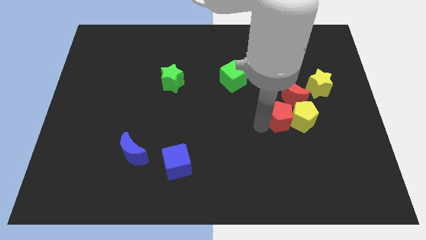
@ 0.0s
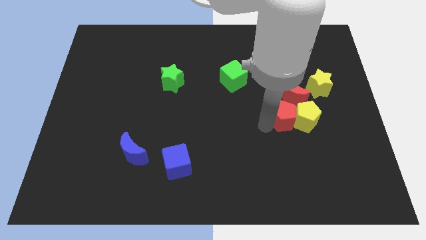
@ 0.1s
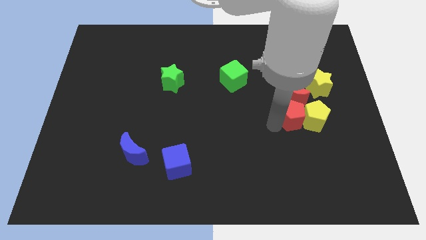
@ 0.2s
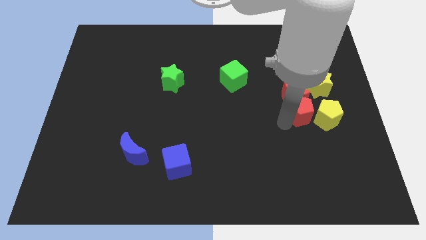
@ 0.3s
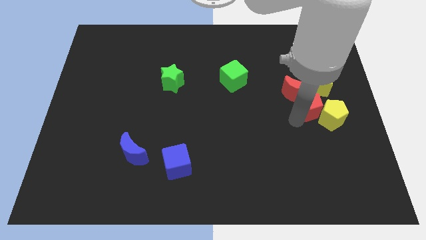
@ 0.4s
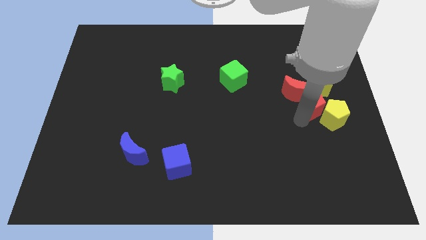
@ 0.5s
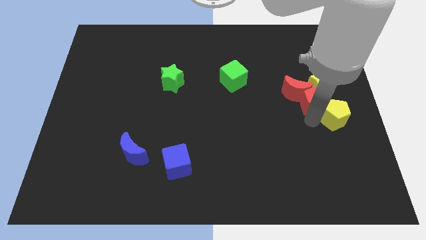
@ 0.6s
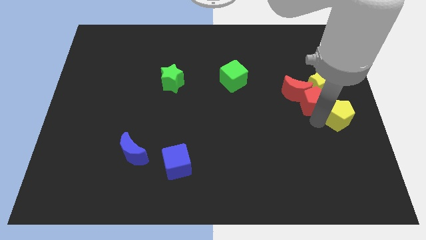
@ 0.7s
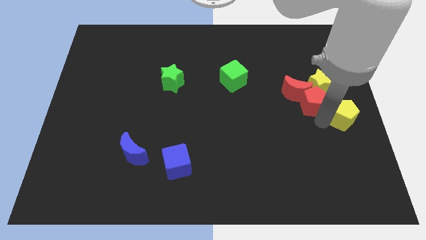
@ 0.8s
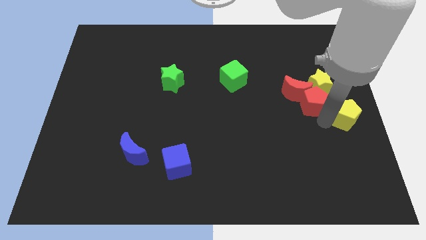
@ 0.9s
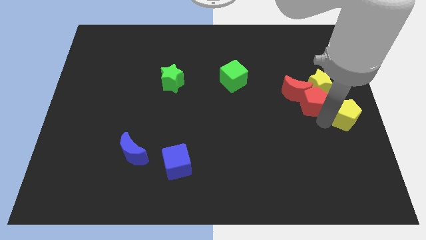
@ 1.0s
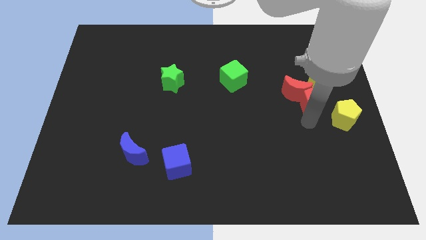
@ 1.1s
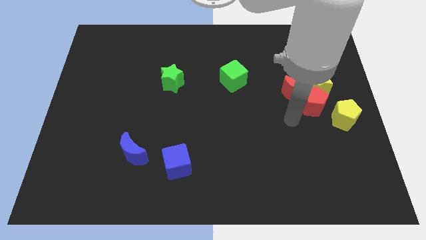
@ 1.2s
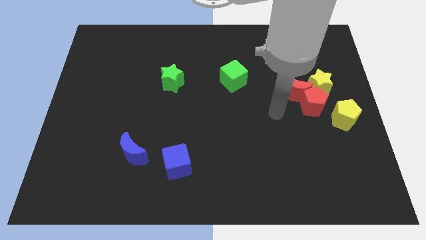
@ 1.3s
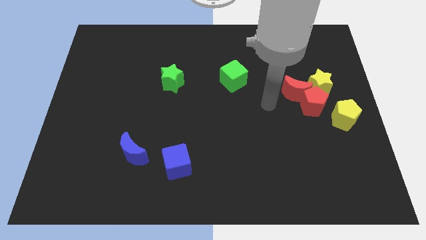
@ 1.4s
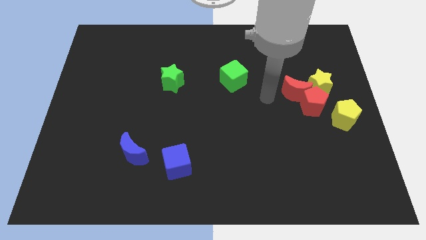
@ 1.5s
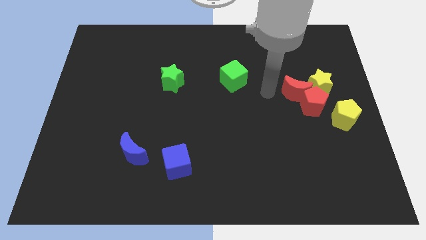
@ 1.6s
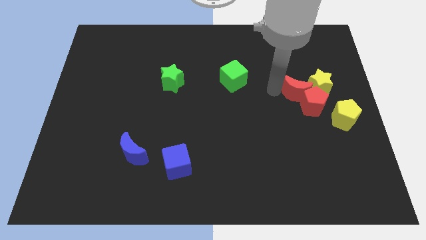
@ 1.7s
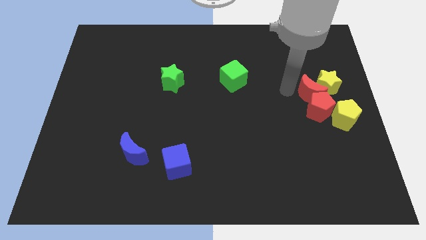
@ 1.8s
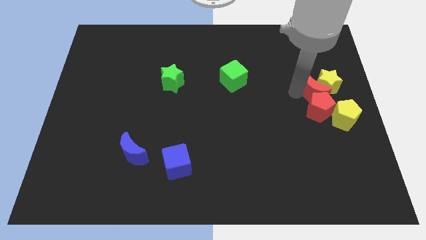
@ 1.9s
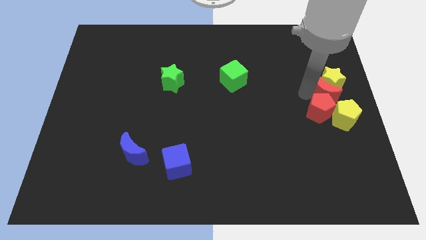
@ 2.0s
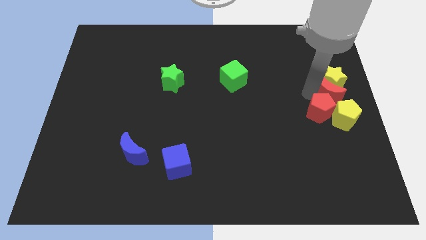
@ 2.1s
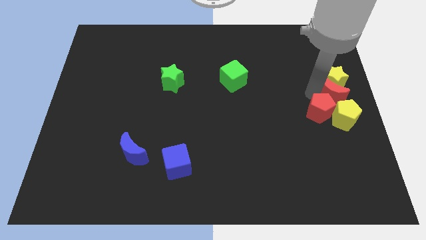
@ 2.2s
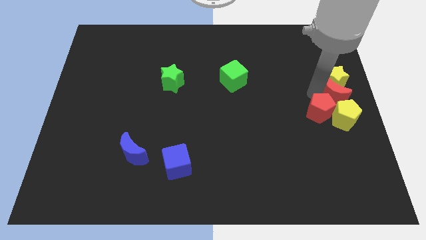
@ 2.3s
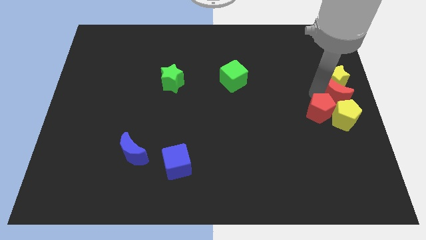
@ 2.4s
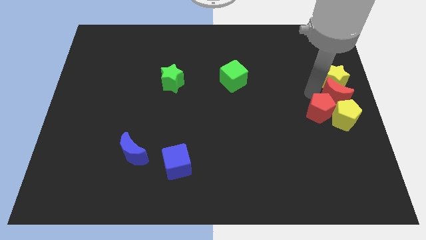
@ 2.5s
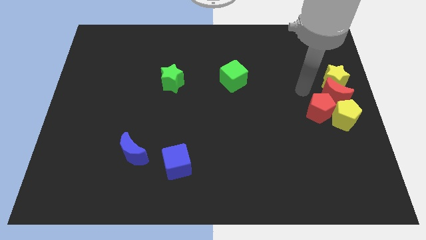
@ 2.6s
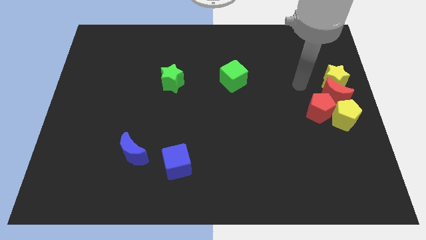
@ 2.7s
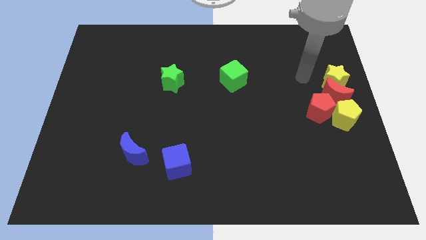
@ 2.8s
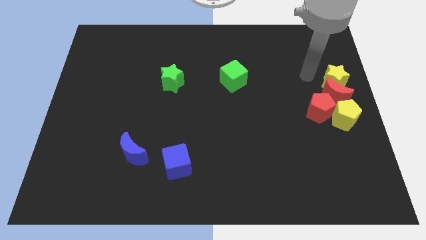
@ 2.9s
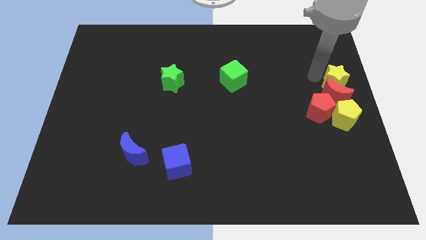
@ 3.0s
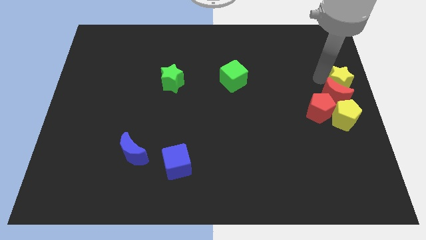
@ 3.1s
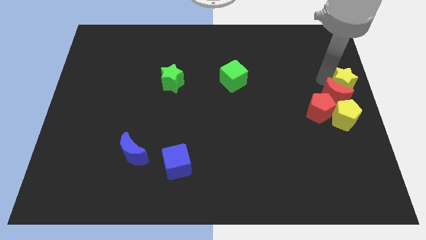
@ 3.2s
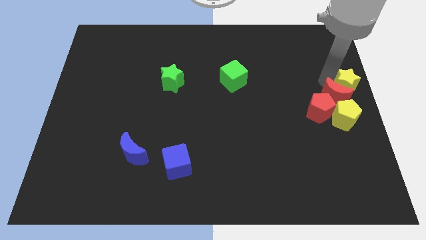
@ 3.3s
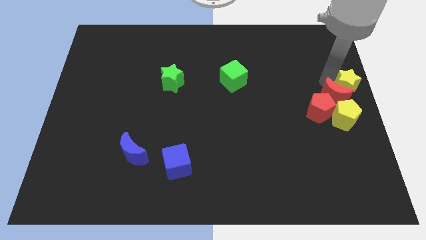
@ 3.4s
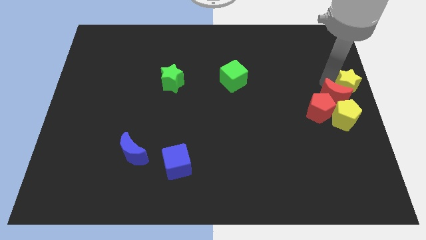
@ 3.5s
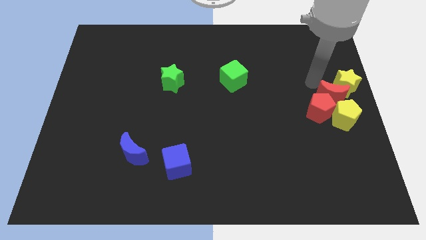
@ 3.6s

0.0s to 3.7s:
put yellow and the red blocks at the center right

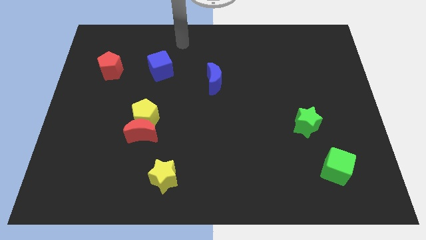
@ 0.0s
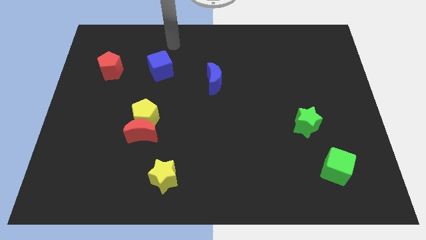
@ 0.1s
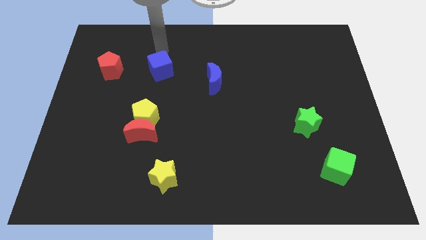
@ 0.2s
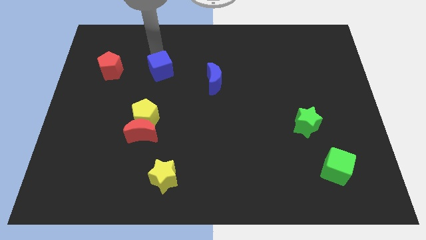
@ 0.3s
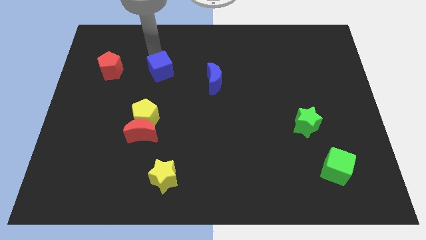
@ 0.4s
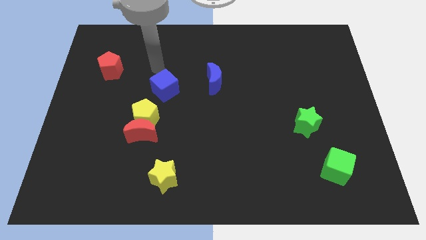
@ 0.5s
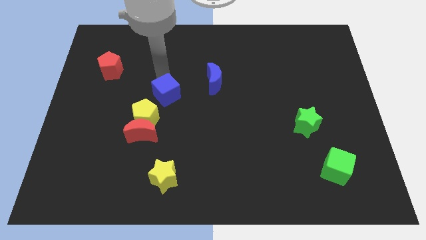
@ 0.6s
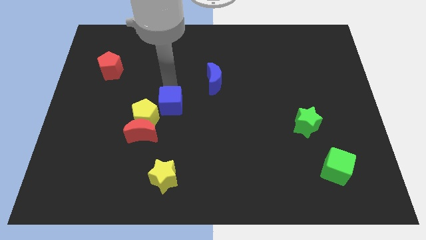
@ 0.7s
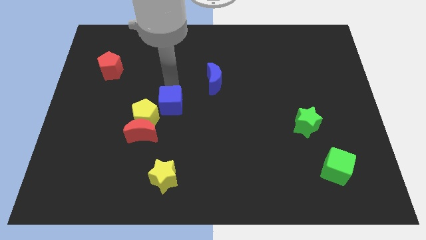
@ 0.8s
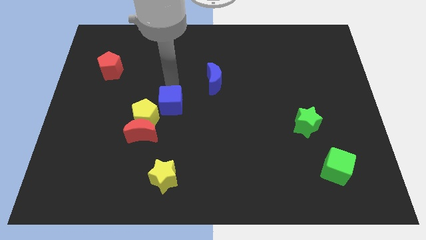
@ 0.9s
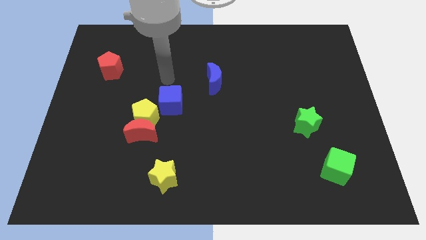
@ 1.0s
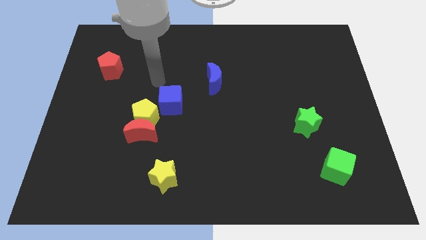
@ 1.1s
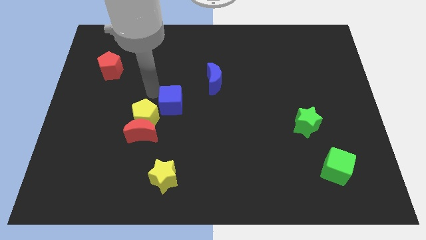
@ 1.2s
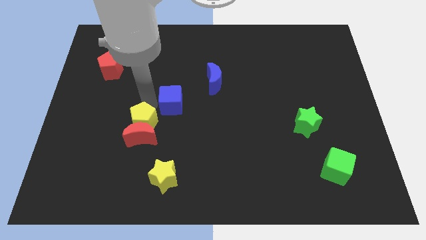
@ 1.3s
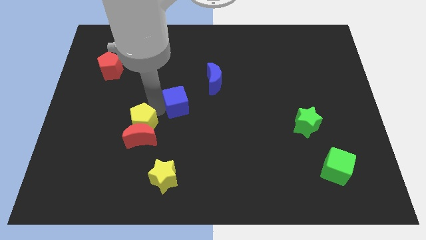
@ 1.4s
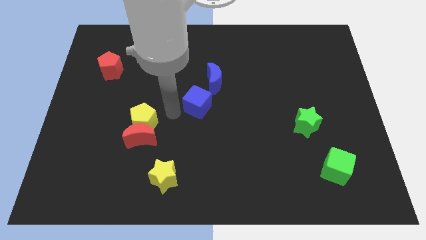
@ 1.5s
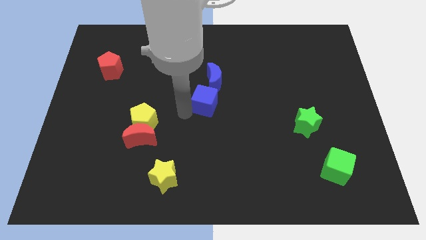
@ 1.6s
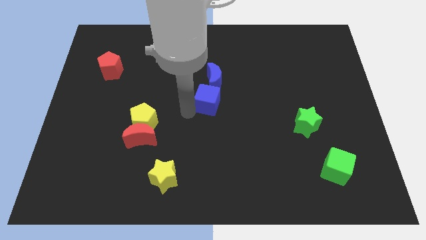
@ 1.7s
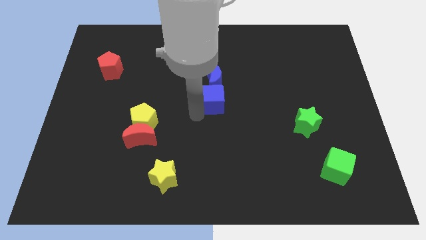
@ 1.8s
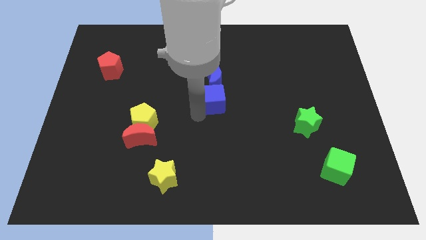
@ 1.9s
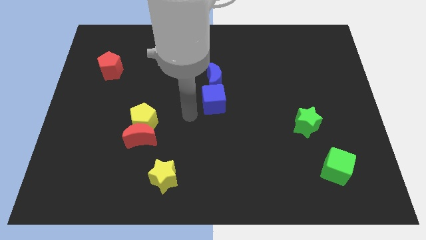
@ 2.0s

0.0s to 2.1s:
place the blue cube below blue moon

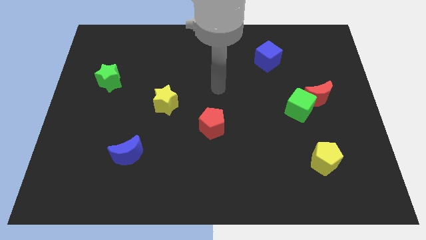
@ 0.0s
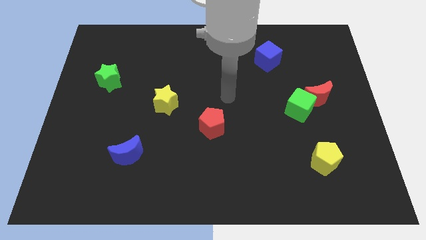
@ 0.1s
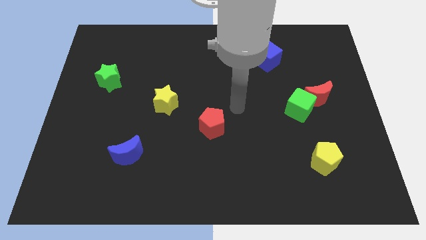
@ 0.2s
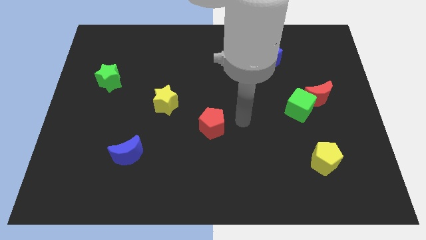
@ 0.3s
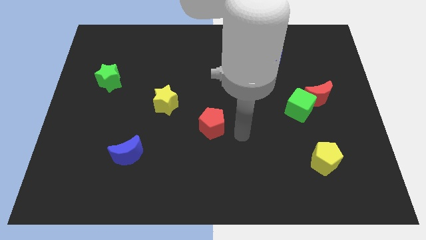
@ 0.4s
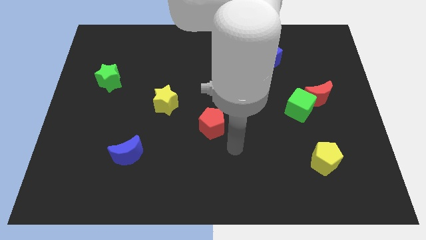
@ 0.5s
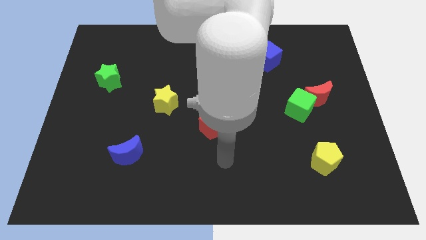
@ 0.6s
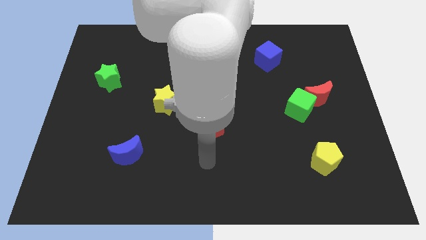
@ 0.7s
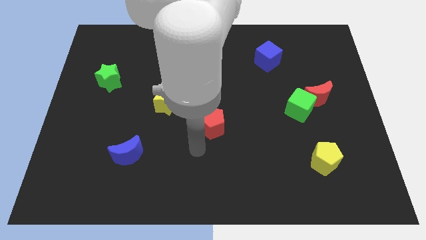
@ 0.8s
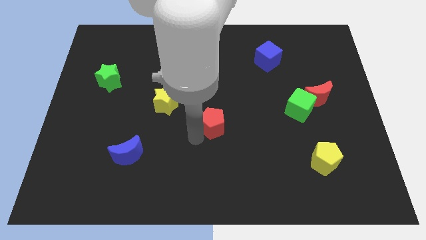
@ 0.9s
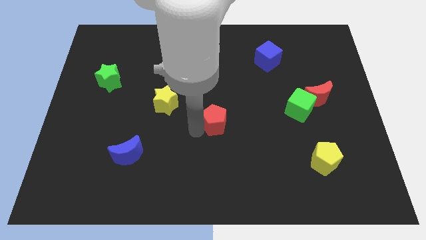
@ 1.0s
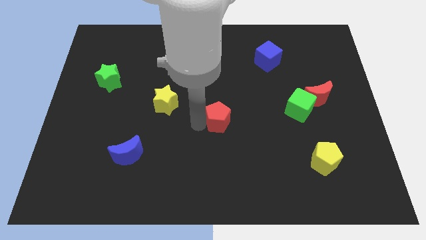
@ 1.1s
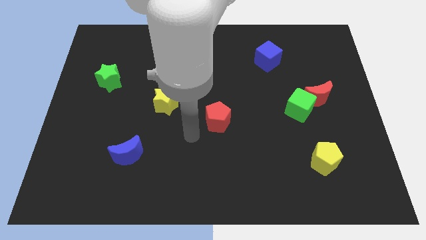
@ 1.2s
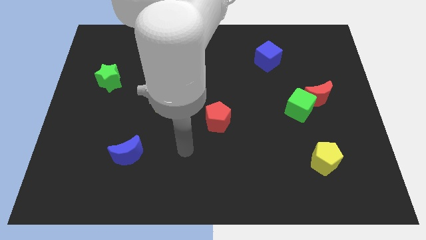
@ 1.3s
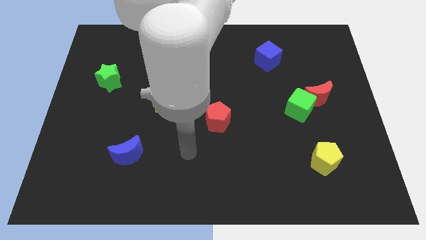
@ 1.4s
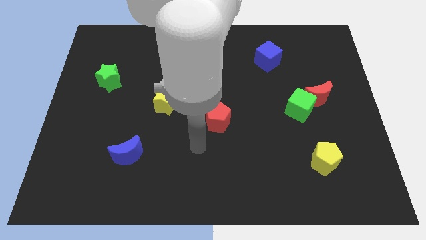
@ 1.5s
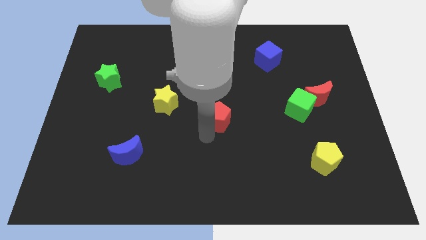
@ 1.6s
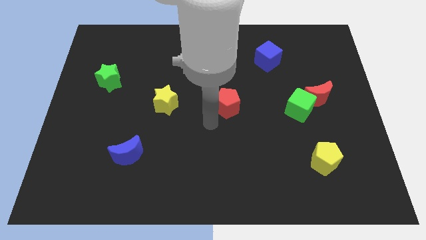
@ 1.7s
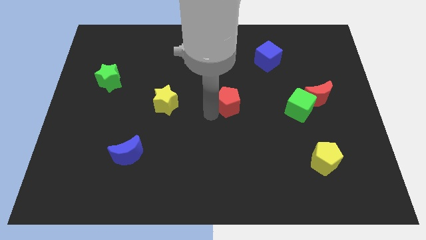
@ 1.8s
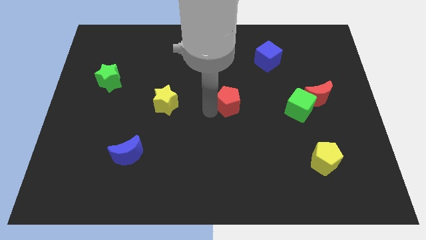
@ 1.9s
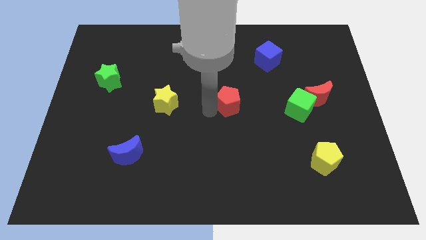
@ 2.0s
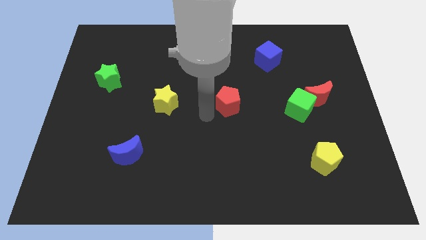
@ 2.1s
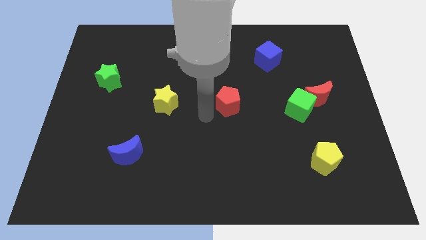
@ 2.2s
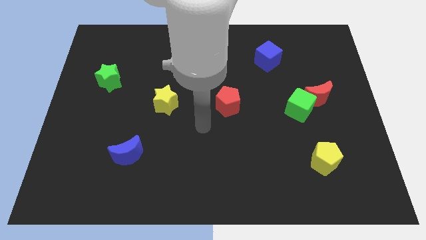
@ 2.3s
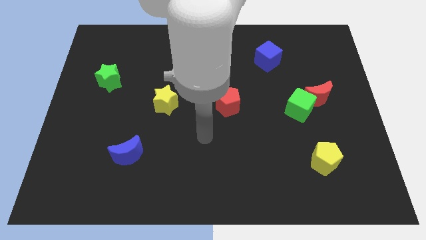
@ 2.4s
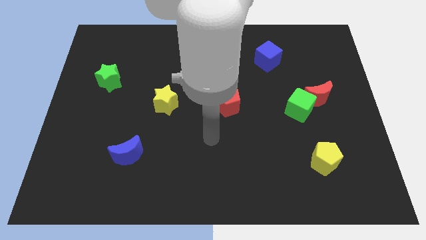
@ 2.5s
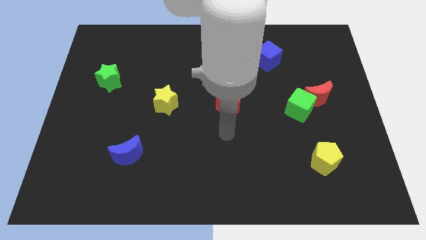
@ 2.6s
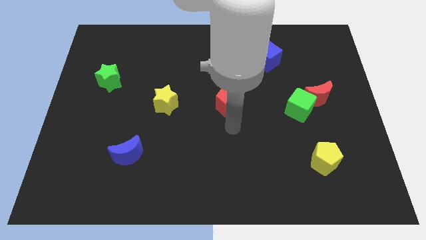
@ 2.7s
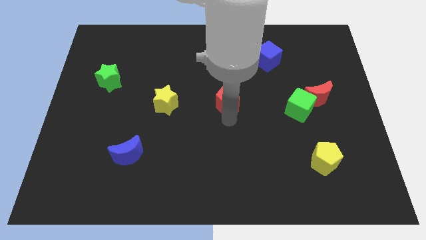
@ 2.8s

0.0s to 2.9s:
move red pentagon right beside the yellow star

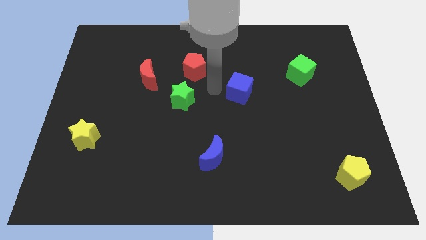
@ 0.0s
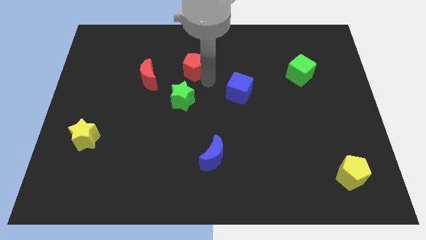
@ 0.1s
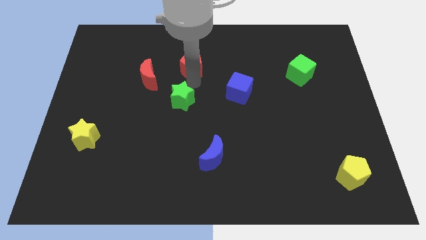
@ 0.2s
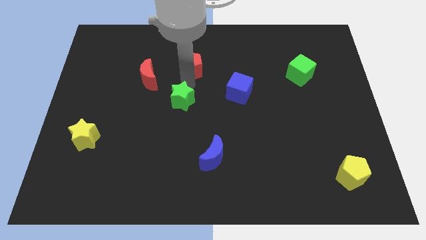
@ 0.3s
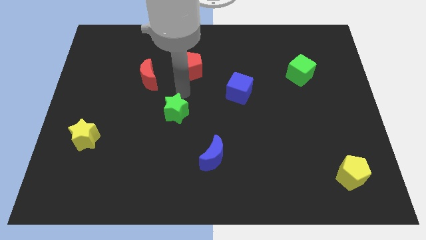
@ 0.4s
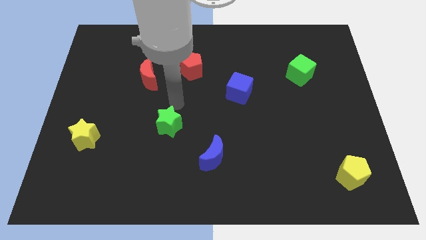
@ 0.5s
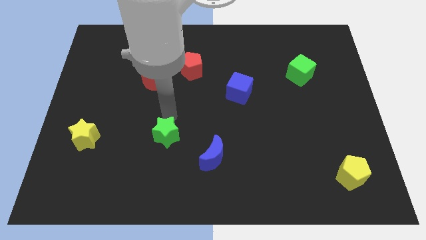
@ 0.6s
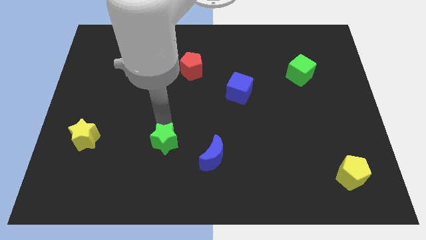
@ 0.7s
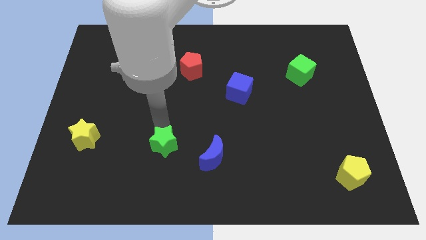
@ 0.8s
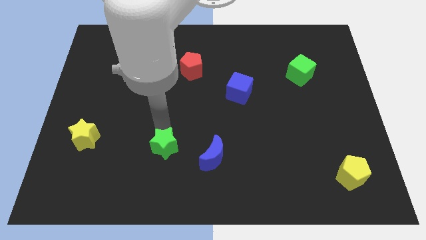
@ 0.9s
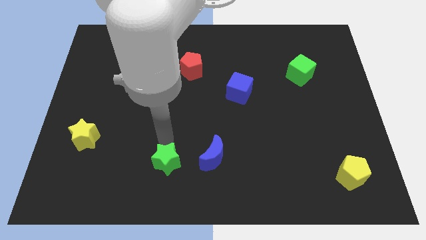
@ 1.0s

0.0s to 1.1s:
slide green star to the left of blue moon
